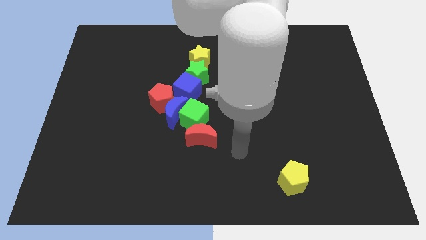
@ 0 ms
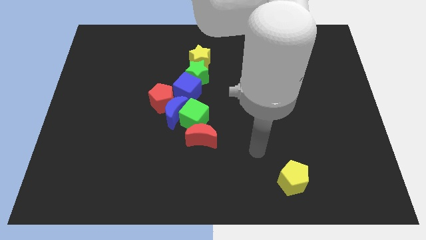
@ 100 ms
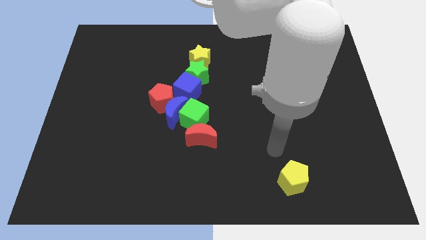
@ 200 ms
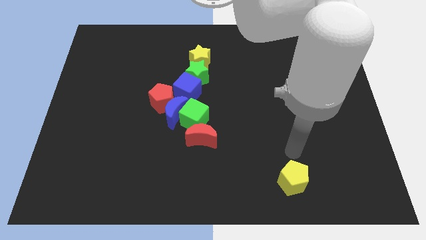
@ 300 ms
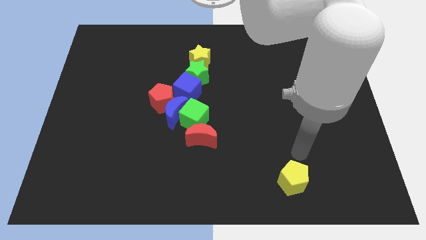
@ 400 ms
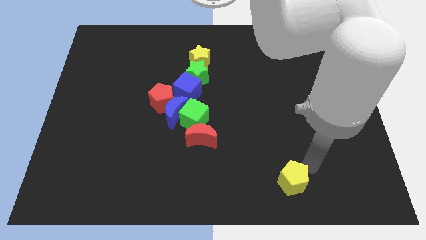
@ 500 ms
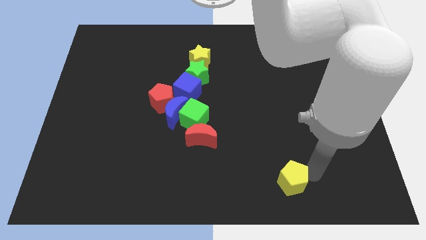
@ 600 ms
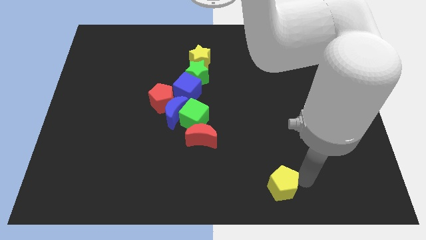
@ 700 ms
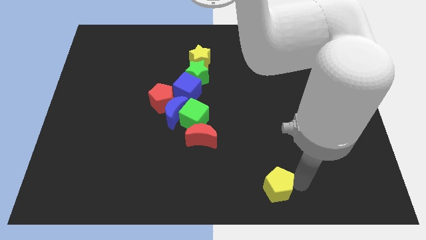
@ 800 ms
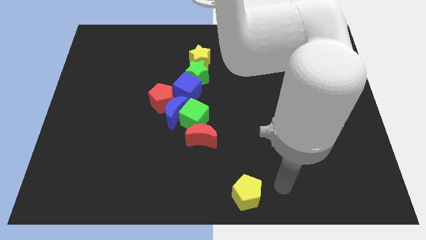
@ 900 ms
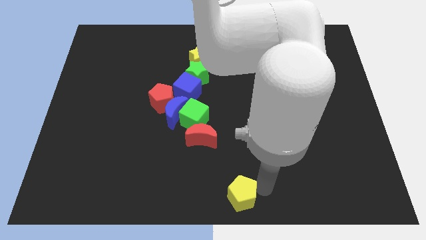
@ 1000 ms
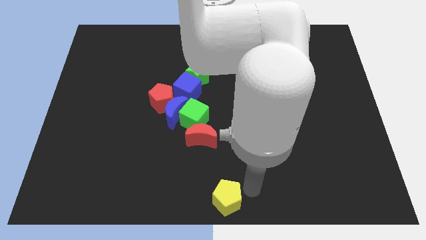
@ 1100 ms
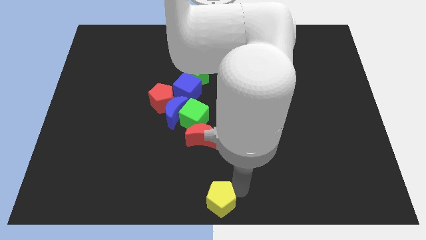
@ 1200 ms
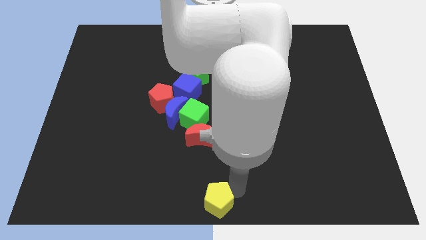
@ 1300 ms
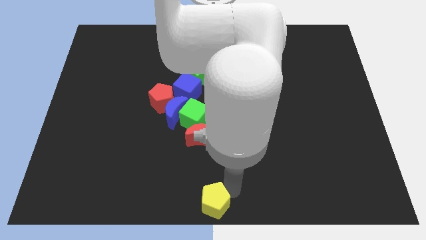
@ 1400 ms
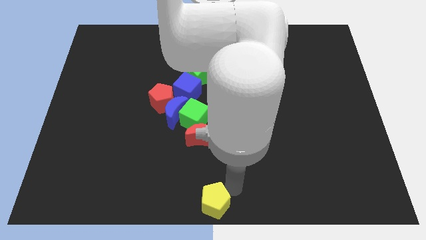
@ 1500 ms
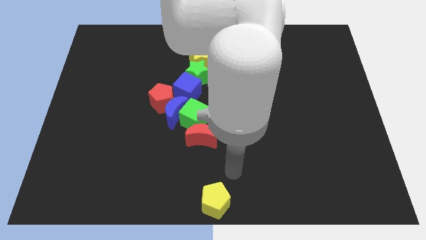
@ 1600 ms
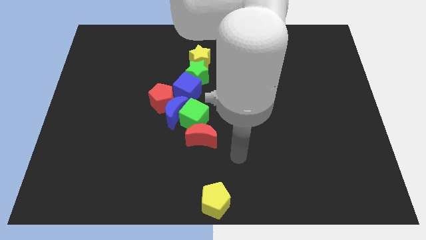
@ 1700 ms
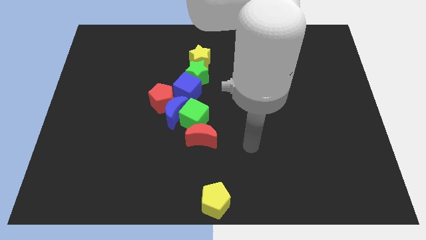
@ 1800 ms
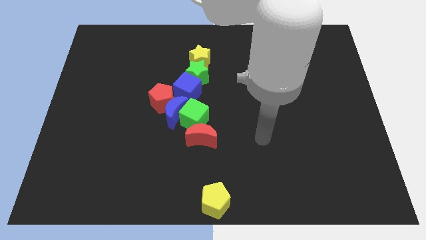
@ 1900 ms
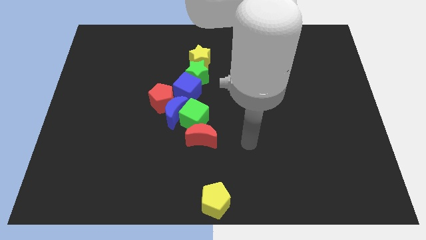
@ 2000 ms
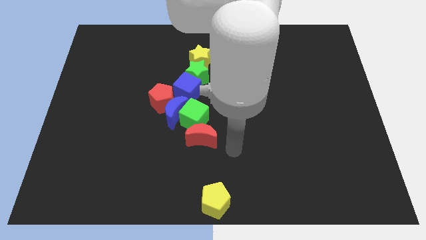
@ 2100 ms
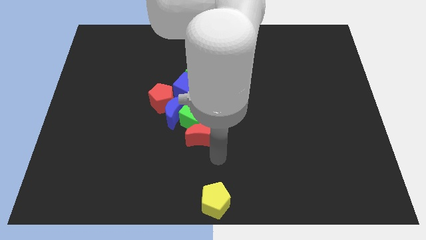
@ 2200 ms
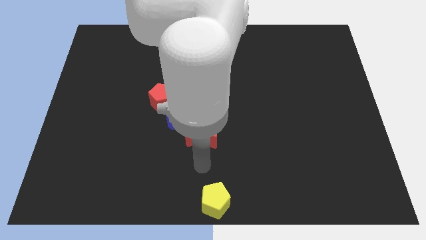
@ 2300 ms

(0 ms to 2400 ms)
move yellow pentagon to the bottom middle of the board

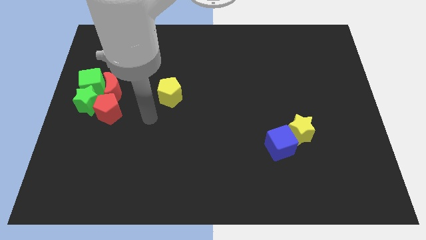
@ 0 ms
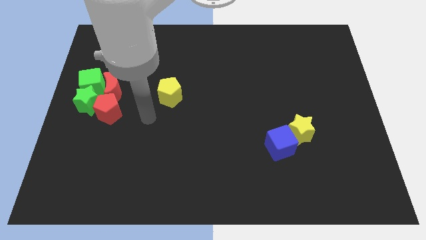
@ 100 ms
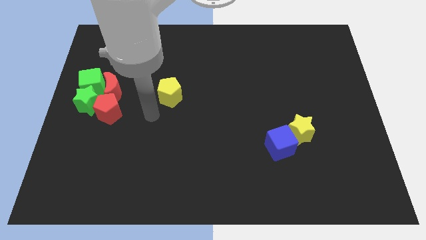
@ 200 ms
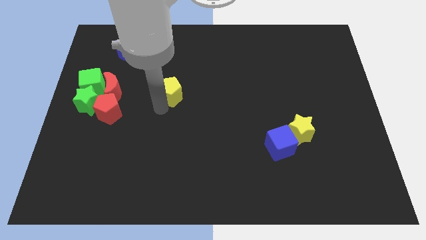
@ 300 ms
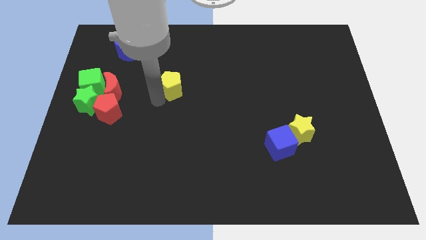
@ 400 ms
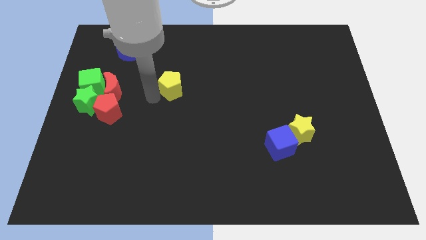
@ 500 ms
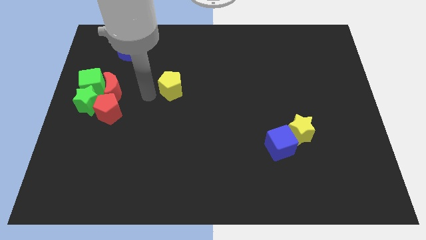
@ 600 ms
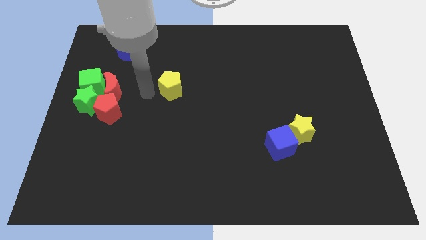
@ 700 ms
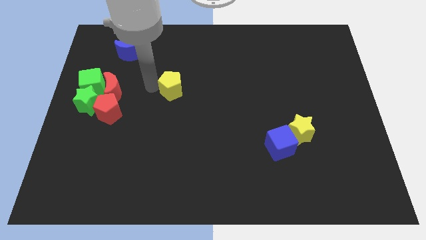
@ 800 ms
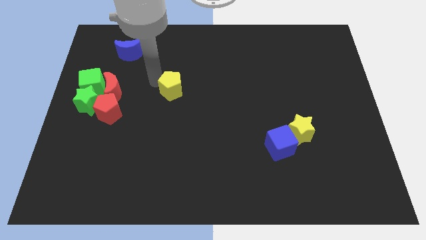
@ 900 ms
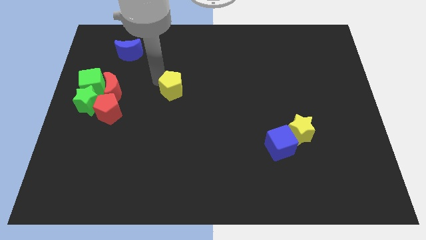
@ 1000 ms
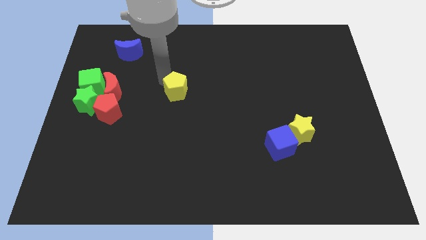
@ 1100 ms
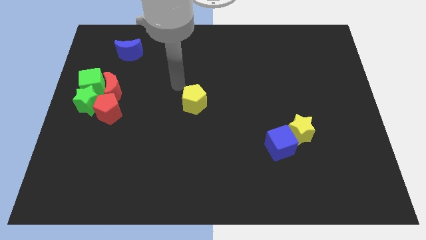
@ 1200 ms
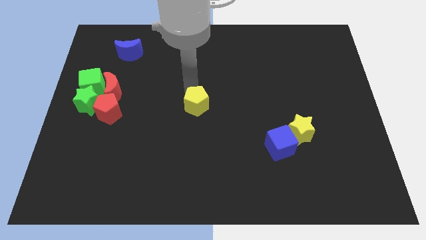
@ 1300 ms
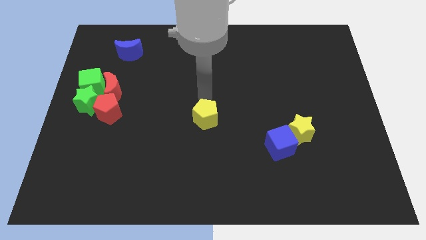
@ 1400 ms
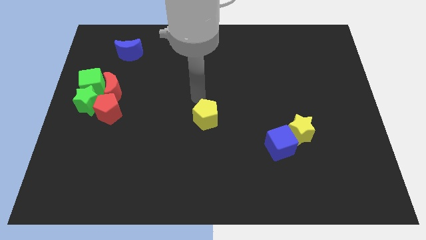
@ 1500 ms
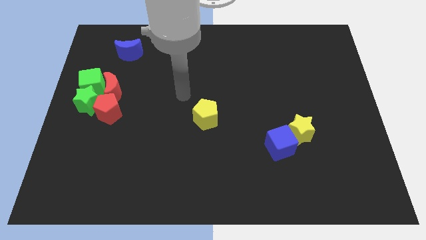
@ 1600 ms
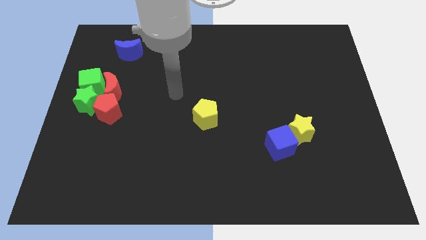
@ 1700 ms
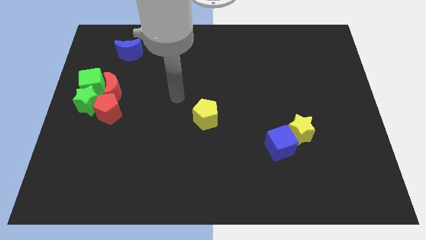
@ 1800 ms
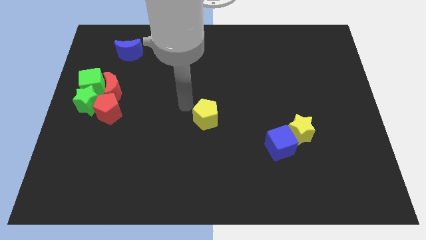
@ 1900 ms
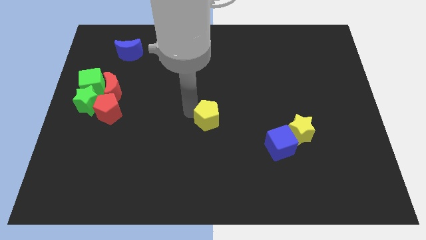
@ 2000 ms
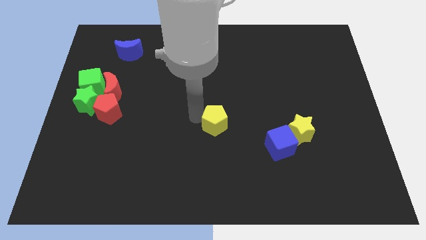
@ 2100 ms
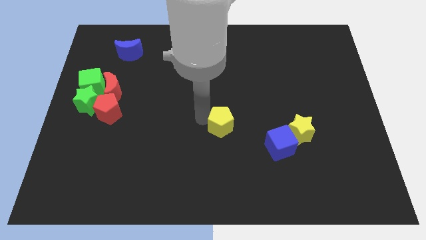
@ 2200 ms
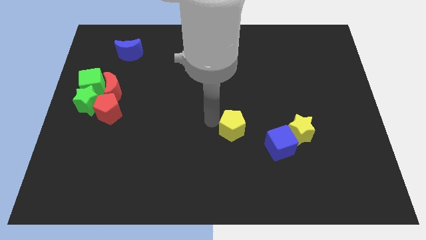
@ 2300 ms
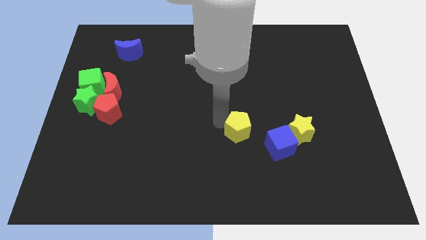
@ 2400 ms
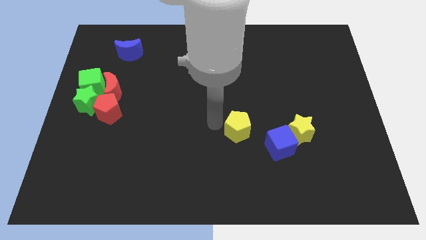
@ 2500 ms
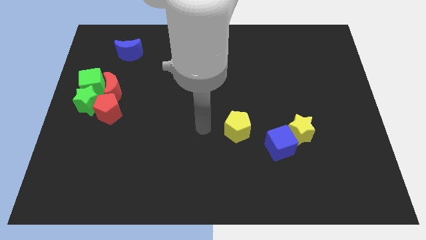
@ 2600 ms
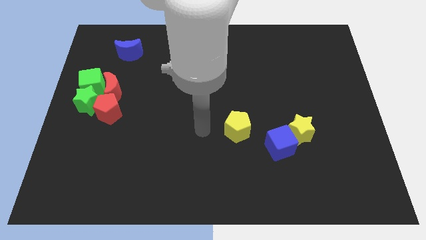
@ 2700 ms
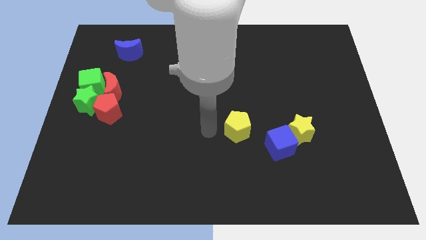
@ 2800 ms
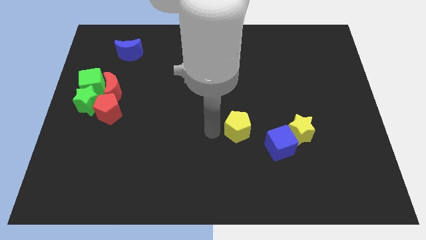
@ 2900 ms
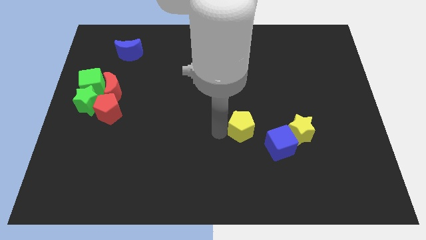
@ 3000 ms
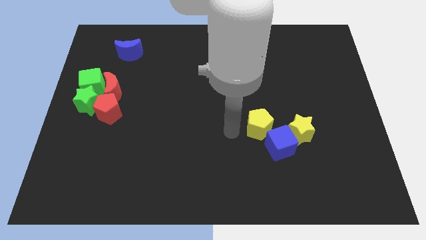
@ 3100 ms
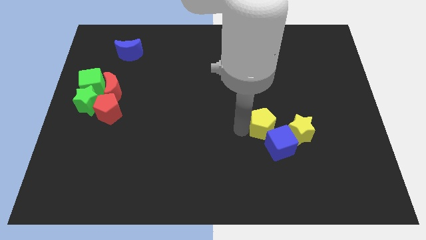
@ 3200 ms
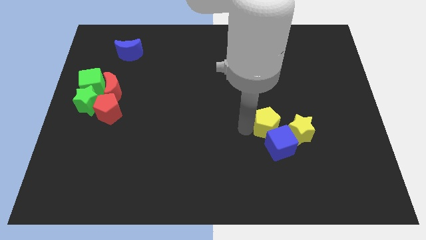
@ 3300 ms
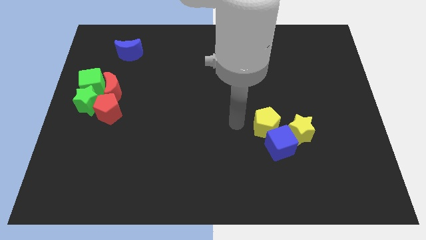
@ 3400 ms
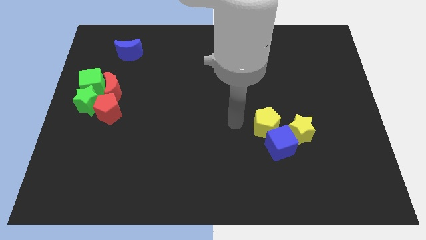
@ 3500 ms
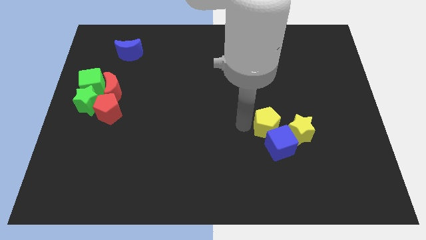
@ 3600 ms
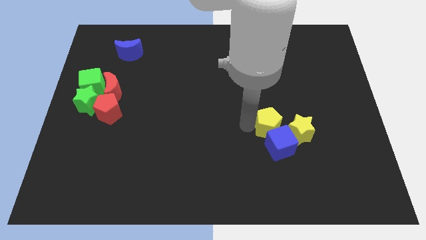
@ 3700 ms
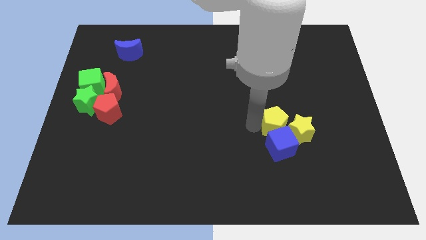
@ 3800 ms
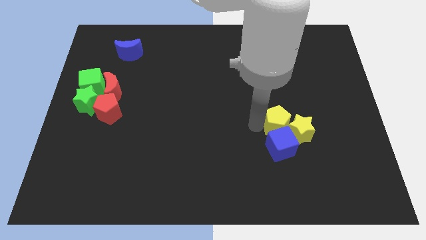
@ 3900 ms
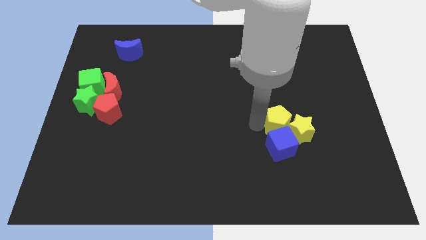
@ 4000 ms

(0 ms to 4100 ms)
push the yellow pentagon into the blue cube

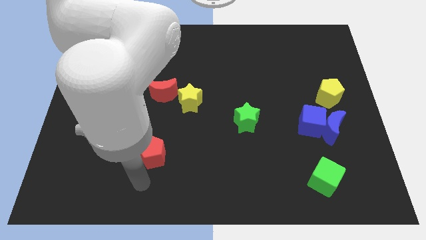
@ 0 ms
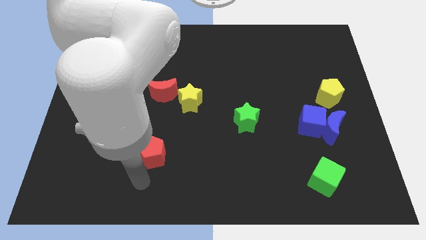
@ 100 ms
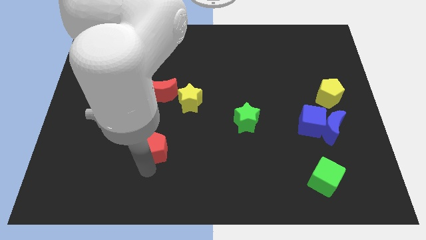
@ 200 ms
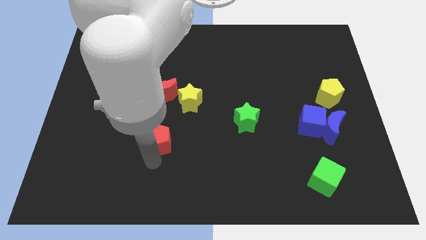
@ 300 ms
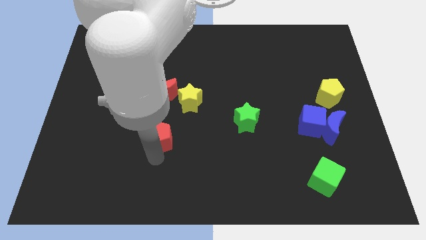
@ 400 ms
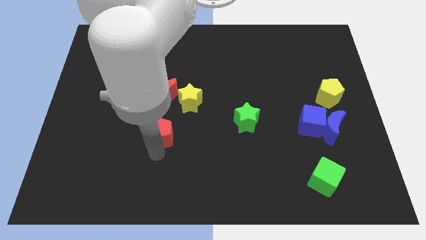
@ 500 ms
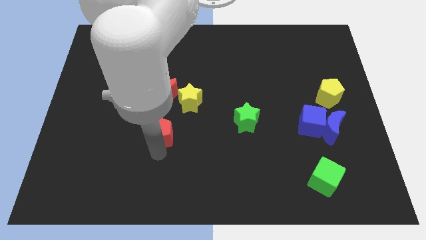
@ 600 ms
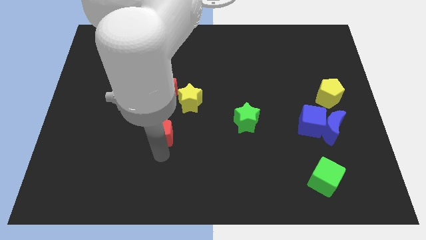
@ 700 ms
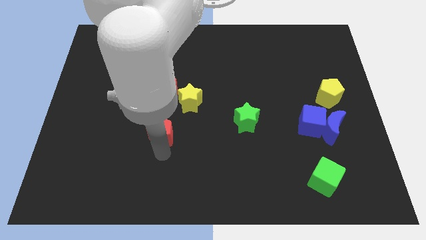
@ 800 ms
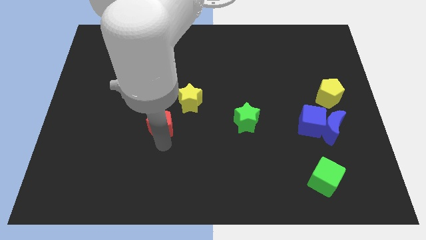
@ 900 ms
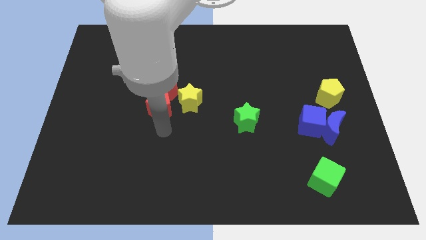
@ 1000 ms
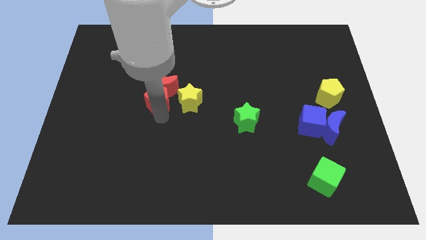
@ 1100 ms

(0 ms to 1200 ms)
move the red pentagon to the bottom of the red crescent

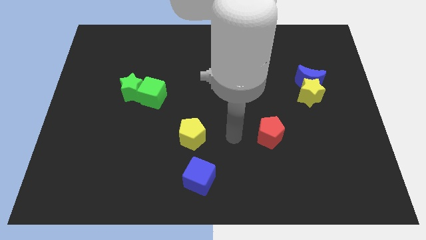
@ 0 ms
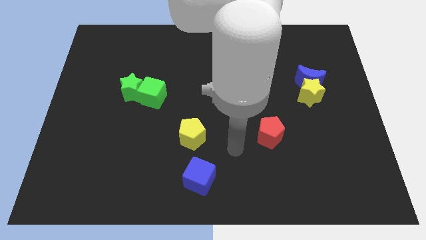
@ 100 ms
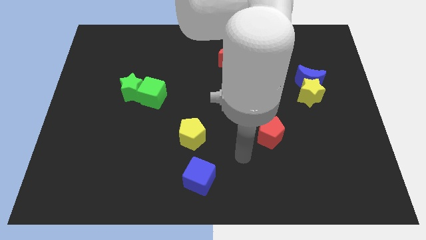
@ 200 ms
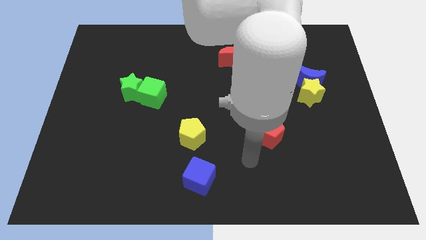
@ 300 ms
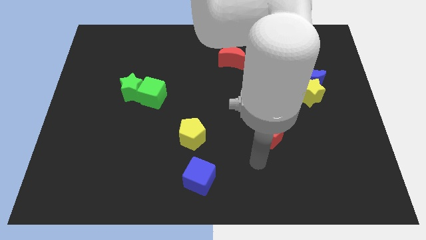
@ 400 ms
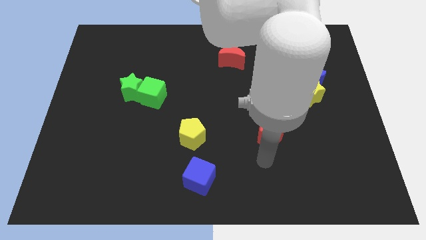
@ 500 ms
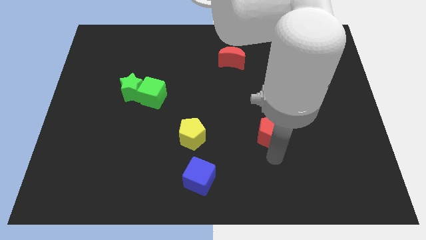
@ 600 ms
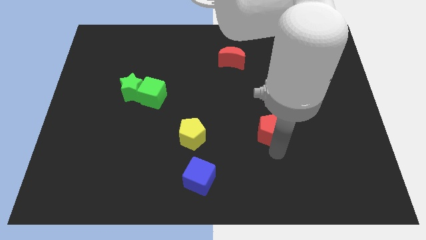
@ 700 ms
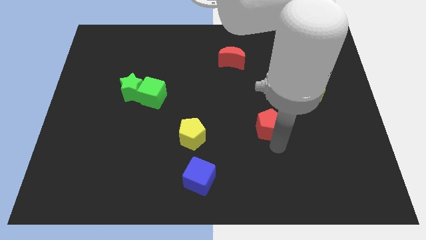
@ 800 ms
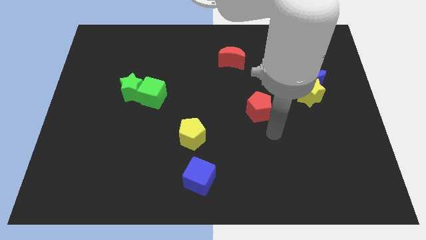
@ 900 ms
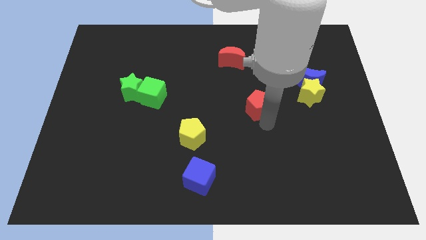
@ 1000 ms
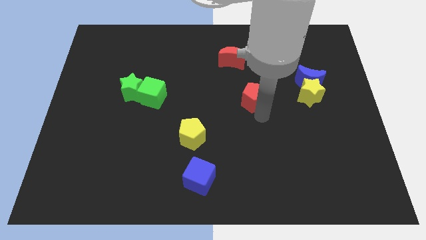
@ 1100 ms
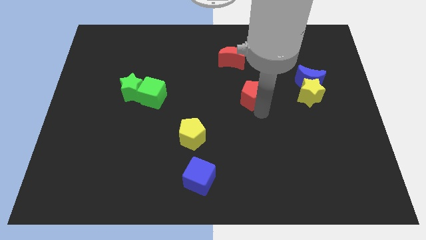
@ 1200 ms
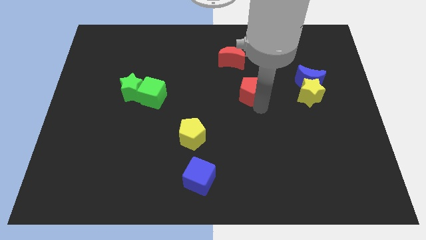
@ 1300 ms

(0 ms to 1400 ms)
slide the red pentagon towards the bottom side of the red crescent
